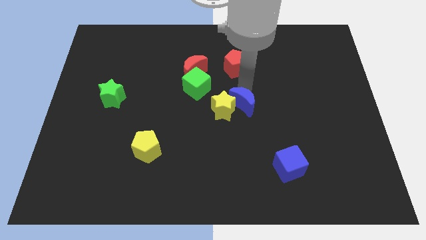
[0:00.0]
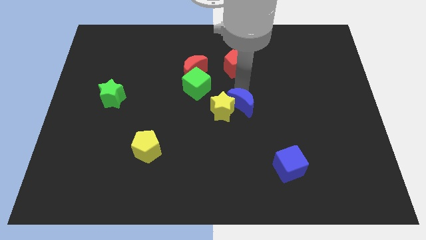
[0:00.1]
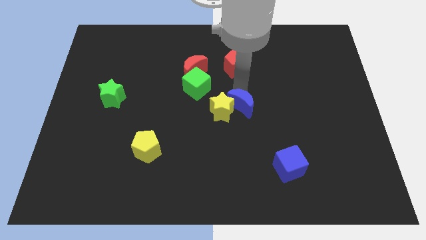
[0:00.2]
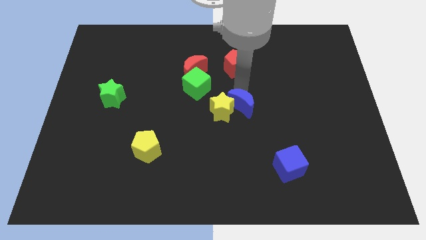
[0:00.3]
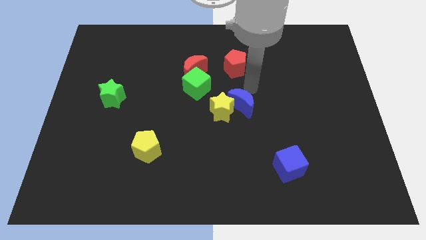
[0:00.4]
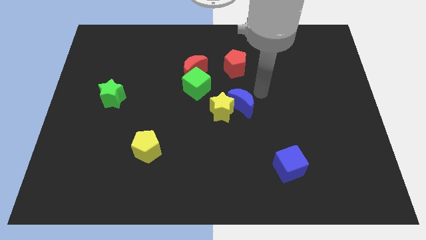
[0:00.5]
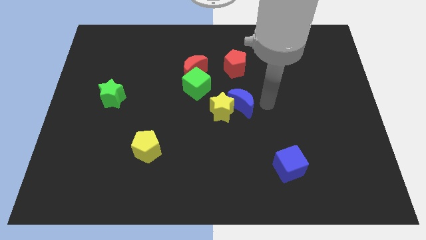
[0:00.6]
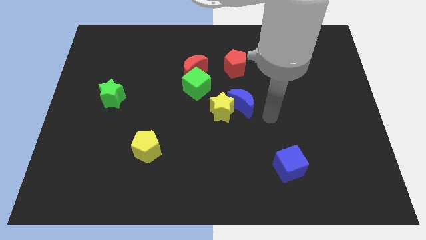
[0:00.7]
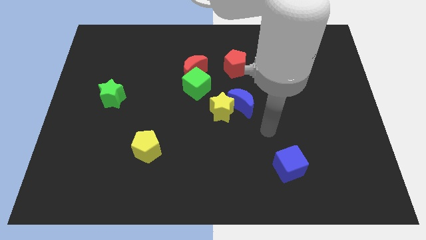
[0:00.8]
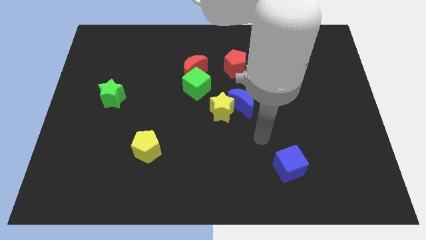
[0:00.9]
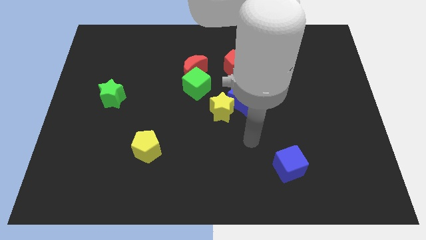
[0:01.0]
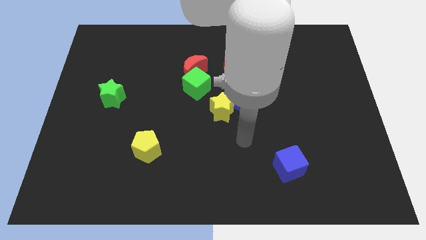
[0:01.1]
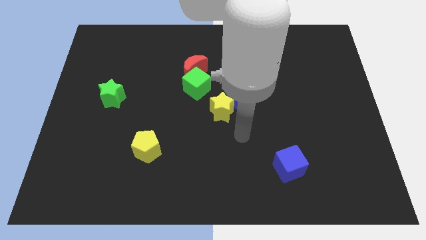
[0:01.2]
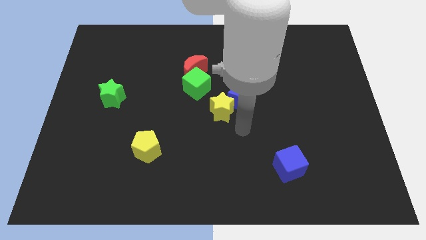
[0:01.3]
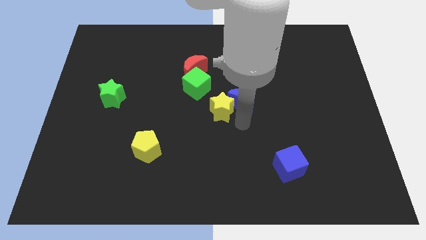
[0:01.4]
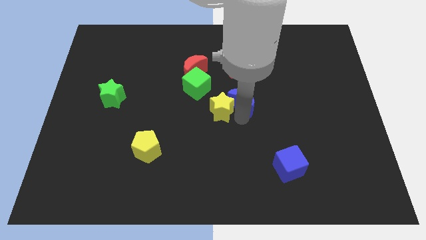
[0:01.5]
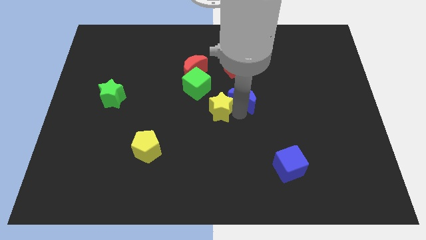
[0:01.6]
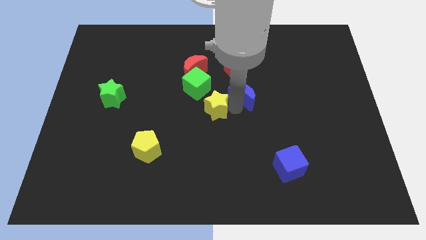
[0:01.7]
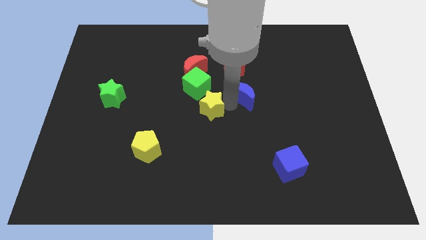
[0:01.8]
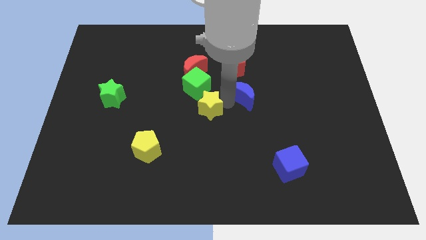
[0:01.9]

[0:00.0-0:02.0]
separate yellow star and blue moon

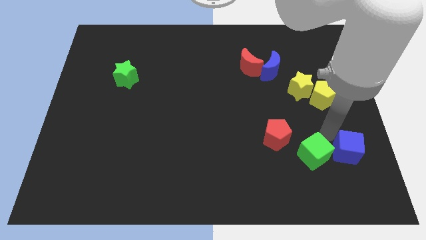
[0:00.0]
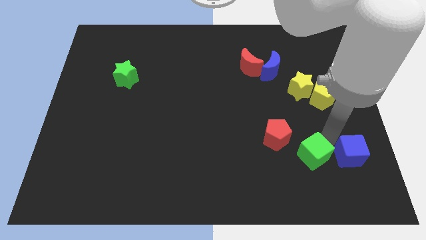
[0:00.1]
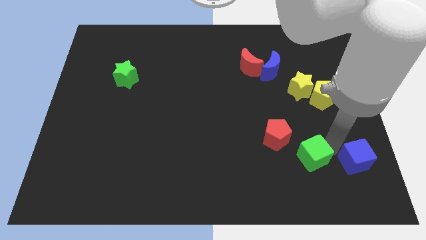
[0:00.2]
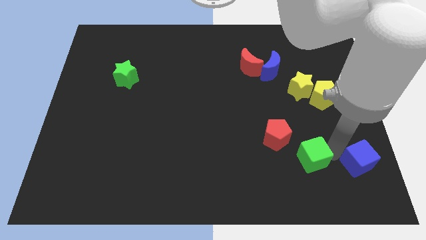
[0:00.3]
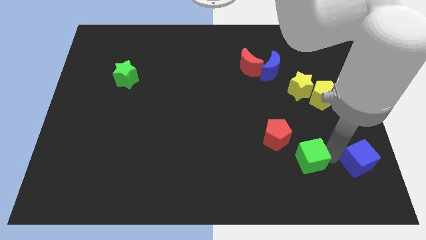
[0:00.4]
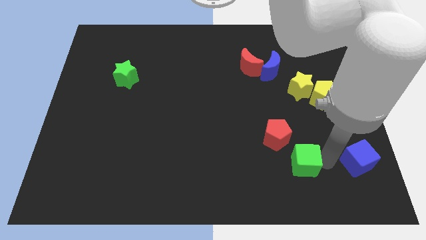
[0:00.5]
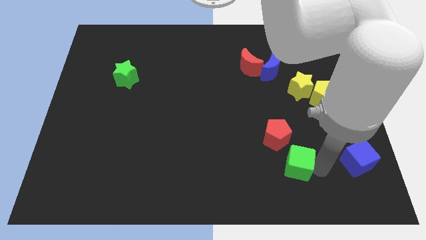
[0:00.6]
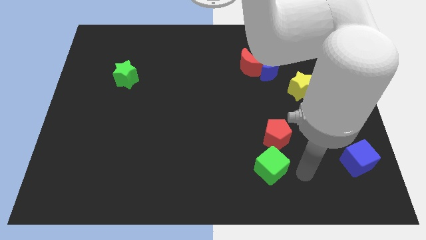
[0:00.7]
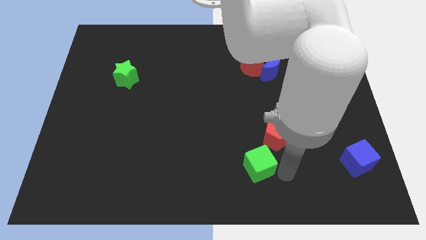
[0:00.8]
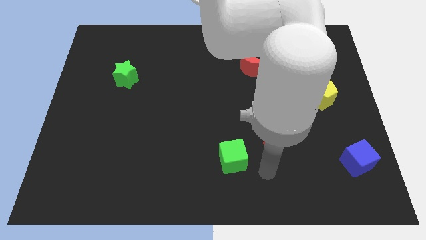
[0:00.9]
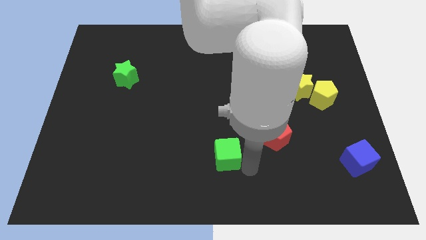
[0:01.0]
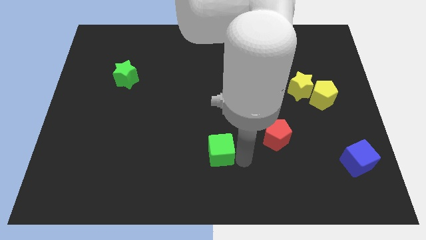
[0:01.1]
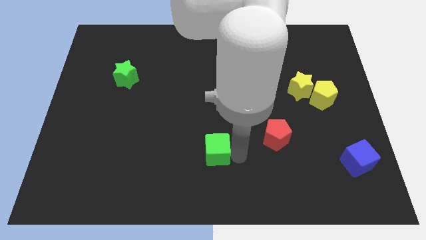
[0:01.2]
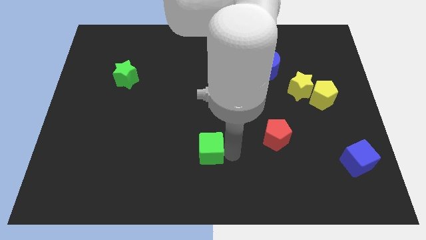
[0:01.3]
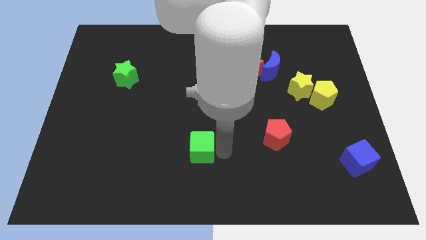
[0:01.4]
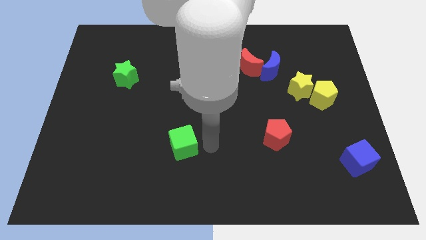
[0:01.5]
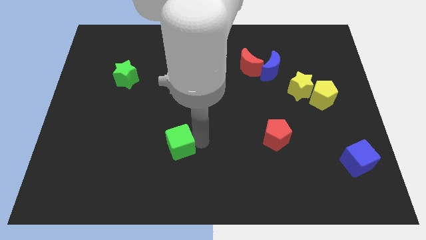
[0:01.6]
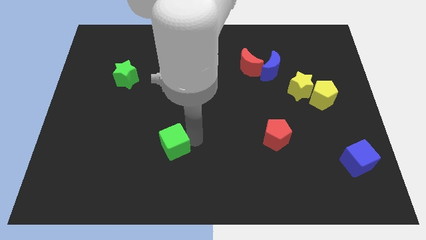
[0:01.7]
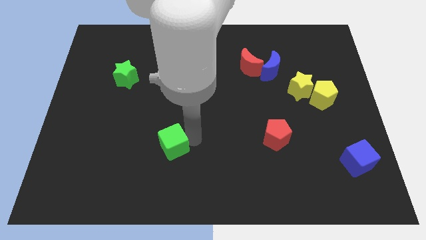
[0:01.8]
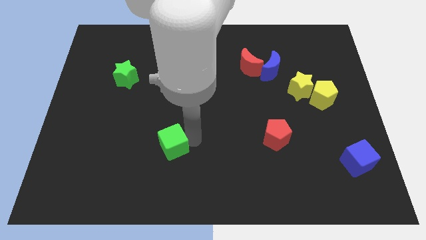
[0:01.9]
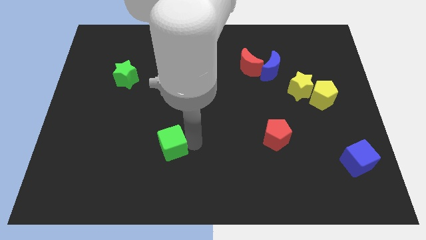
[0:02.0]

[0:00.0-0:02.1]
separate the green cube and blue cube

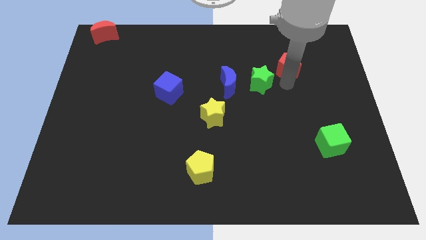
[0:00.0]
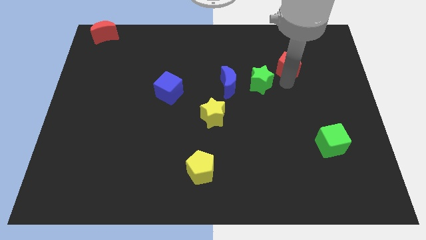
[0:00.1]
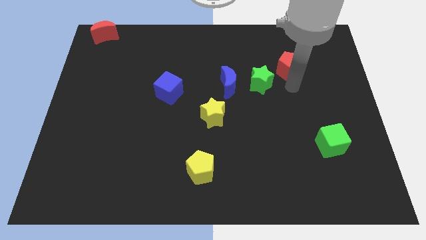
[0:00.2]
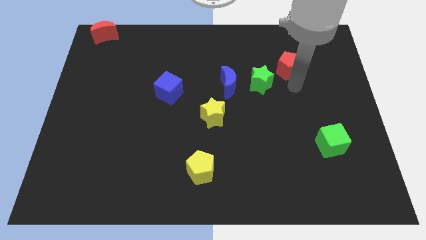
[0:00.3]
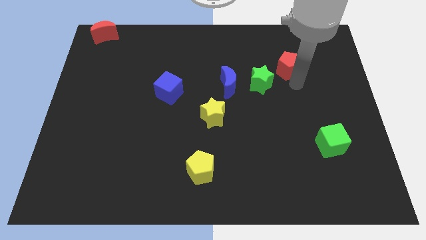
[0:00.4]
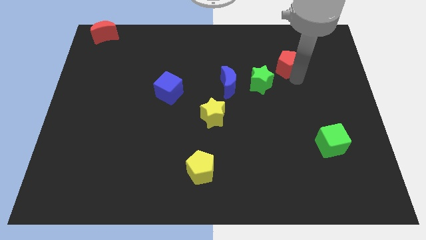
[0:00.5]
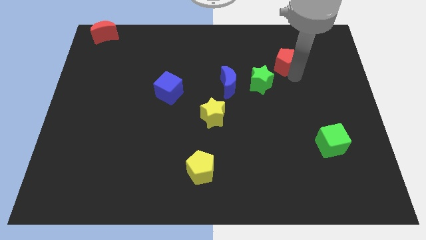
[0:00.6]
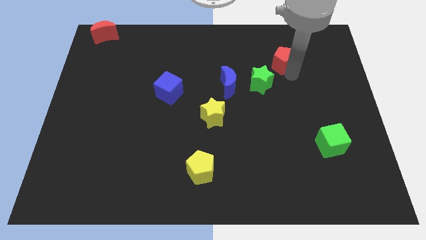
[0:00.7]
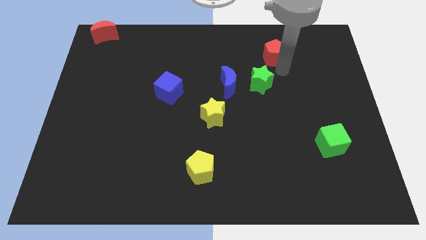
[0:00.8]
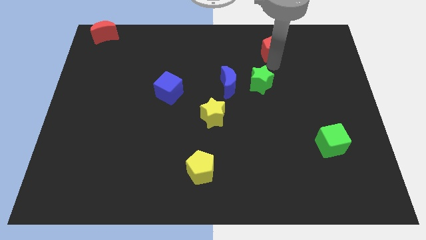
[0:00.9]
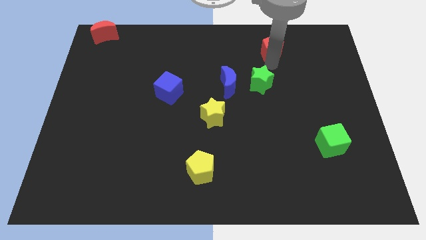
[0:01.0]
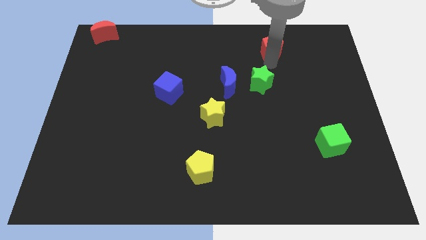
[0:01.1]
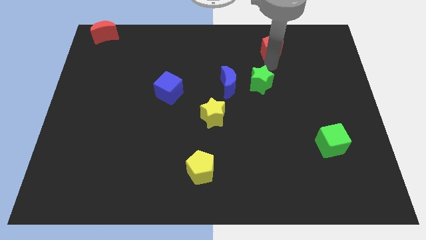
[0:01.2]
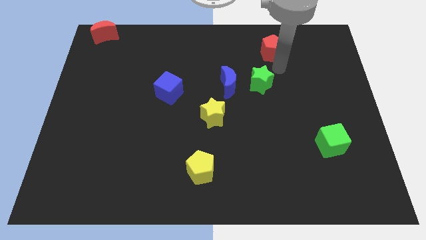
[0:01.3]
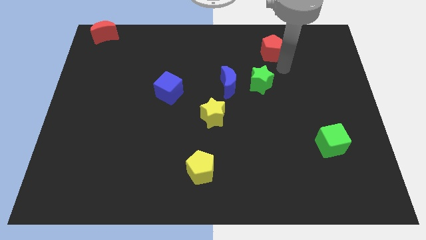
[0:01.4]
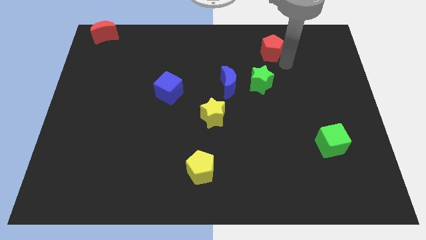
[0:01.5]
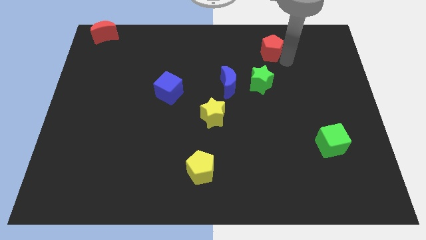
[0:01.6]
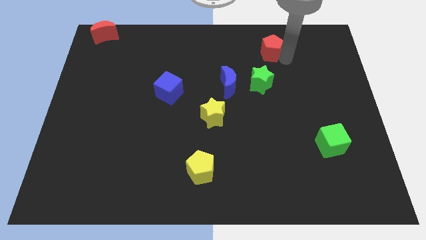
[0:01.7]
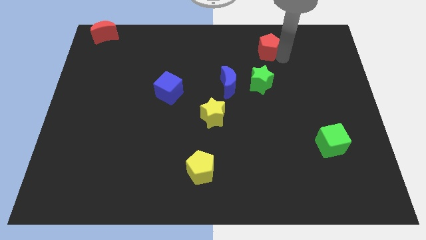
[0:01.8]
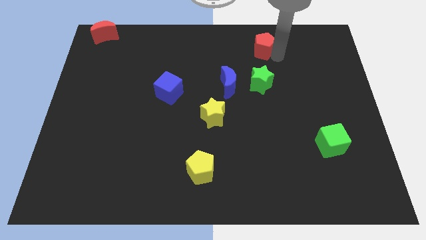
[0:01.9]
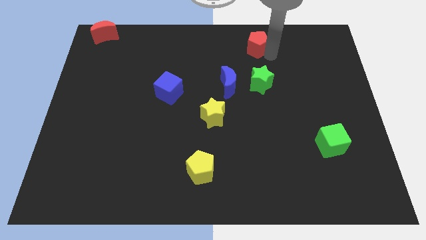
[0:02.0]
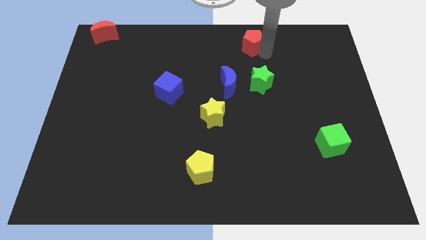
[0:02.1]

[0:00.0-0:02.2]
move red pentagon to the top side of the board

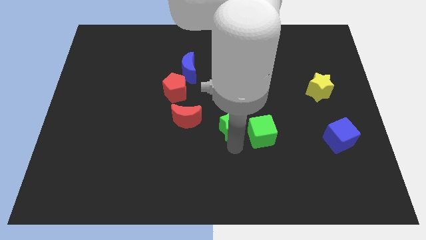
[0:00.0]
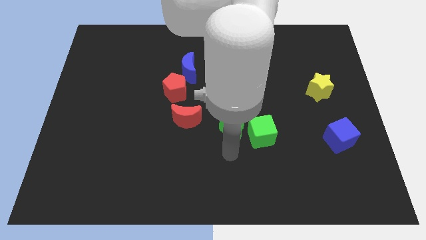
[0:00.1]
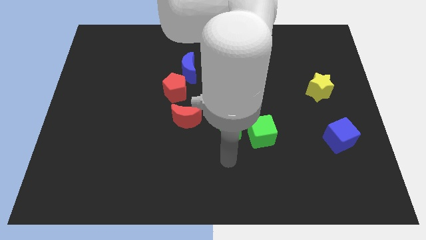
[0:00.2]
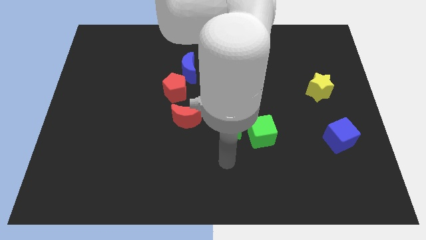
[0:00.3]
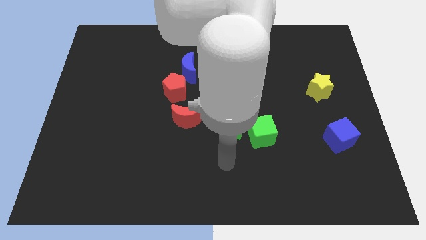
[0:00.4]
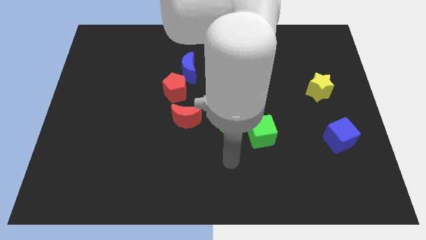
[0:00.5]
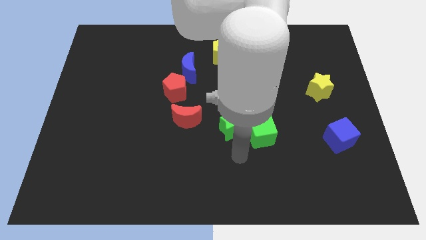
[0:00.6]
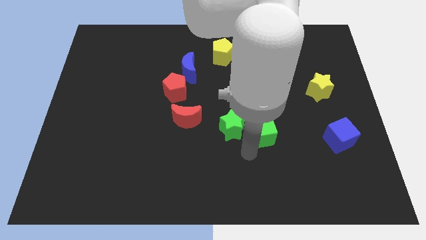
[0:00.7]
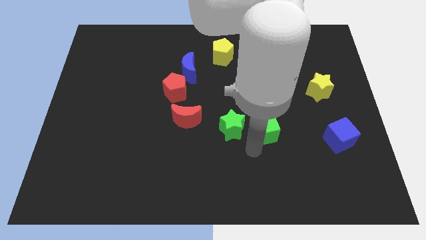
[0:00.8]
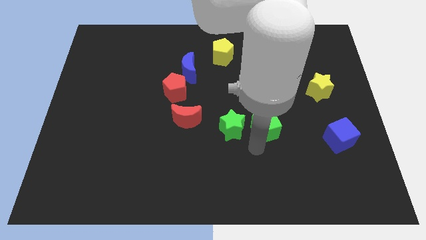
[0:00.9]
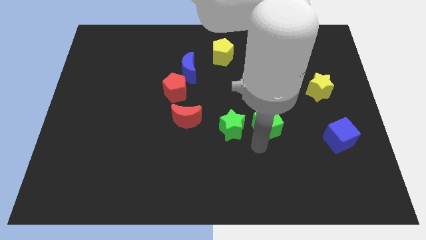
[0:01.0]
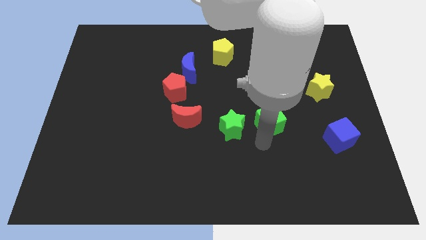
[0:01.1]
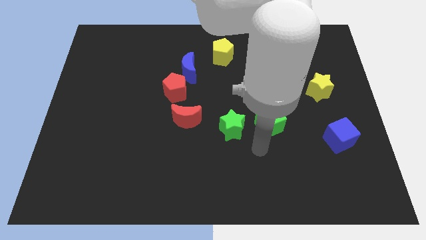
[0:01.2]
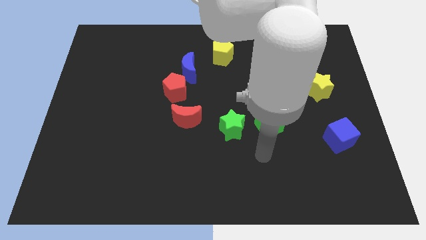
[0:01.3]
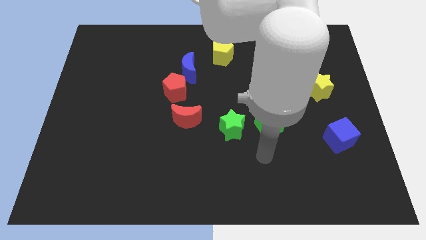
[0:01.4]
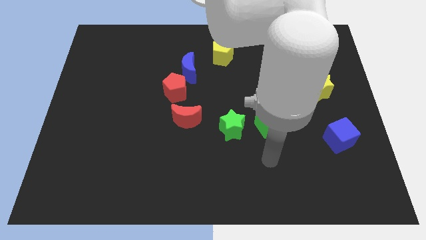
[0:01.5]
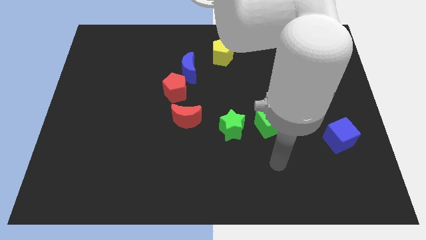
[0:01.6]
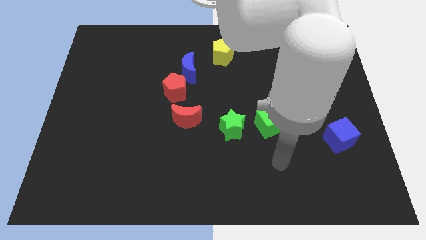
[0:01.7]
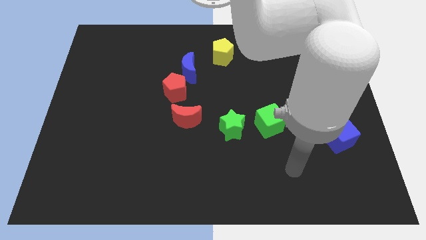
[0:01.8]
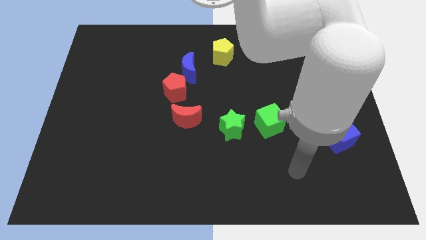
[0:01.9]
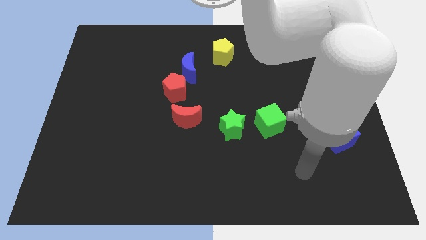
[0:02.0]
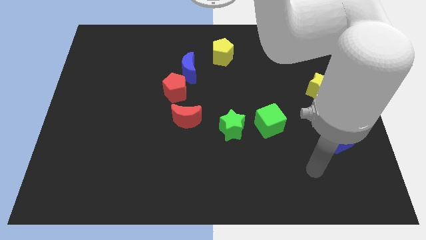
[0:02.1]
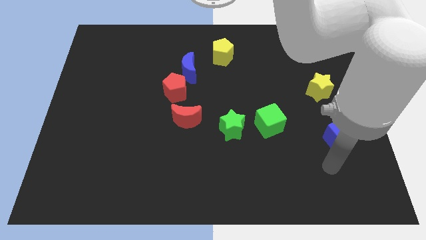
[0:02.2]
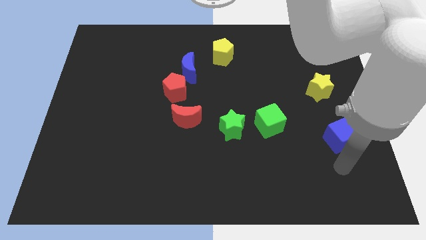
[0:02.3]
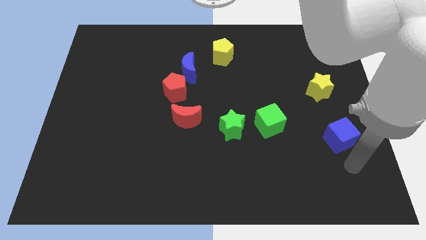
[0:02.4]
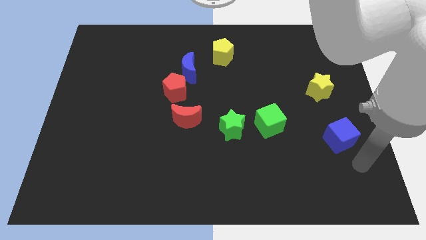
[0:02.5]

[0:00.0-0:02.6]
move the green cube right to the green star
